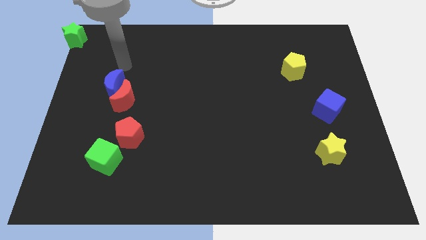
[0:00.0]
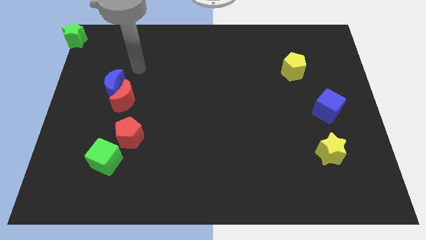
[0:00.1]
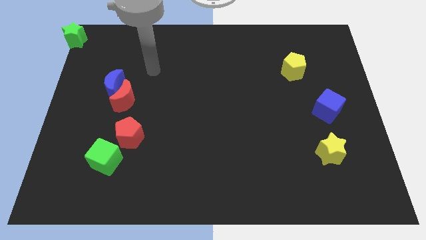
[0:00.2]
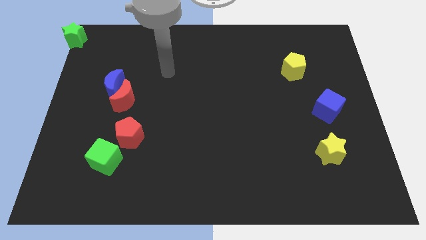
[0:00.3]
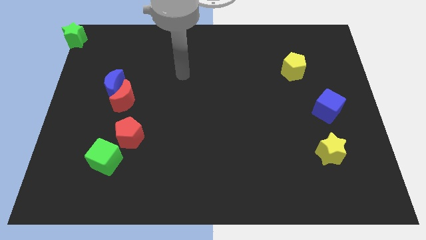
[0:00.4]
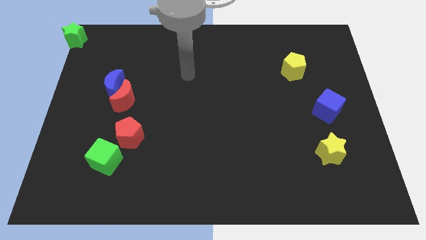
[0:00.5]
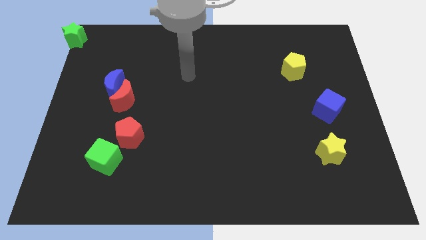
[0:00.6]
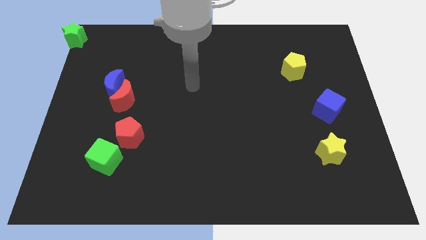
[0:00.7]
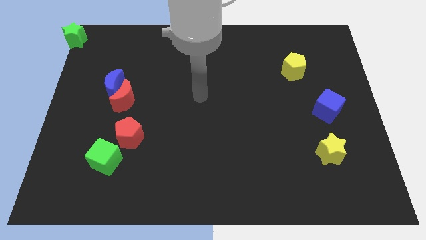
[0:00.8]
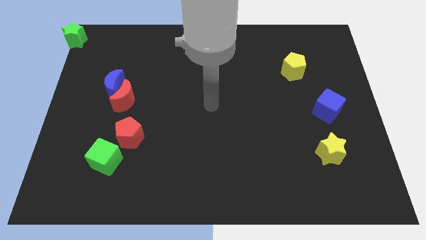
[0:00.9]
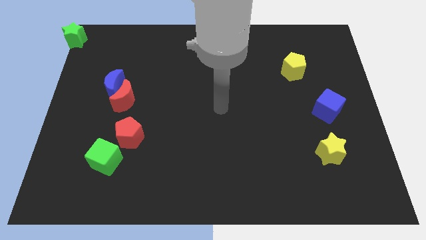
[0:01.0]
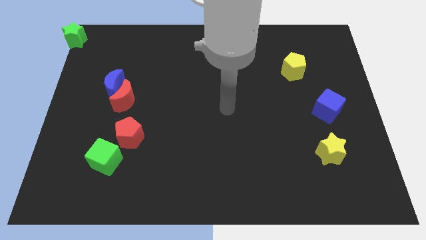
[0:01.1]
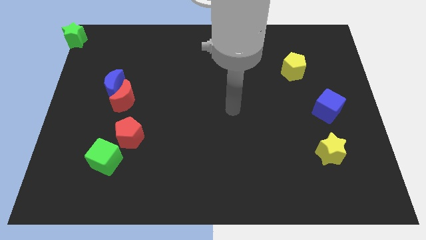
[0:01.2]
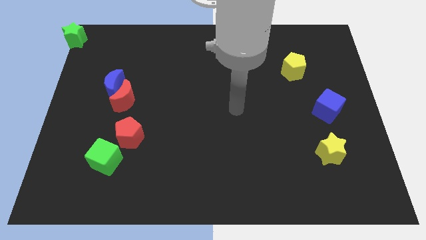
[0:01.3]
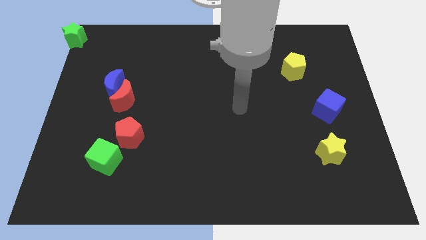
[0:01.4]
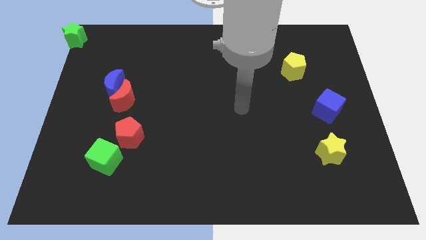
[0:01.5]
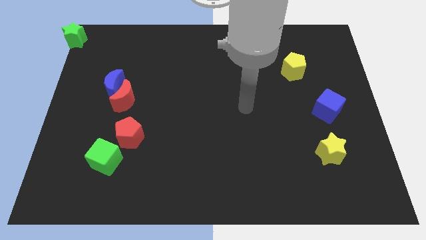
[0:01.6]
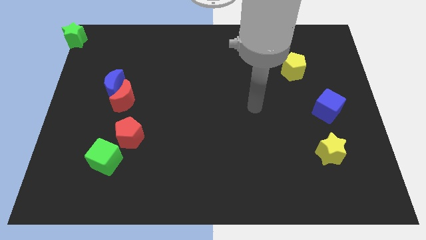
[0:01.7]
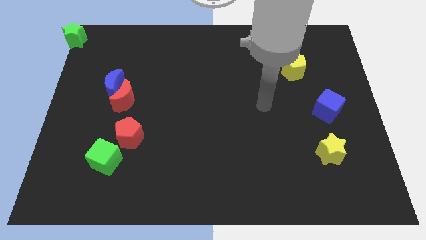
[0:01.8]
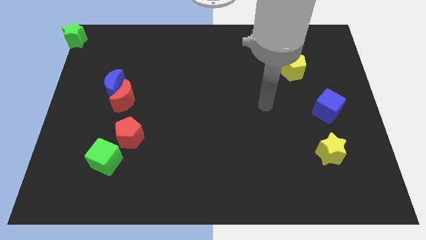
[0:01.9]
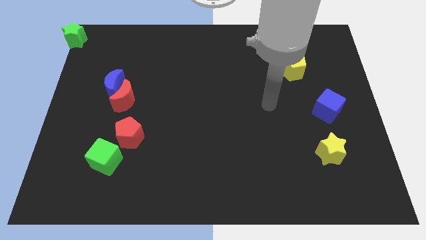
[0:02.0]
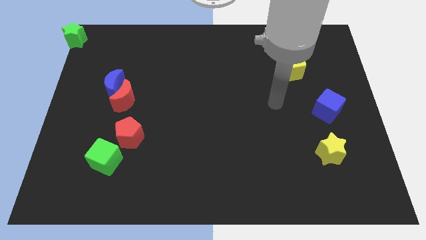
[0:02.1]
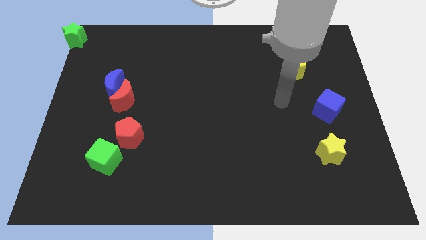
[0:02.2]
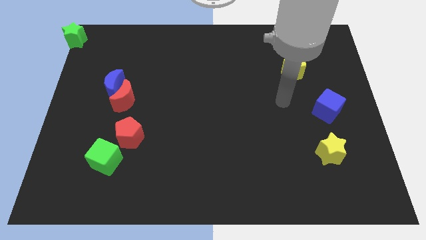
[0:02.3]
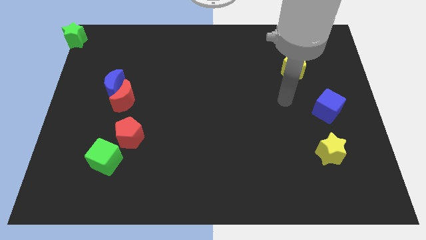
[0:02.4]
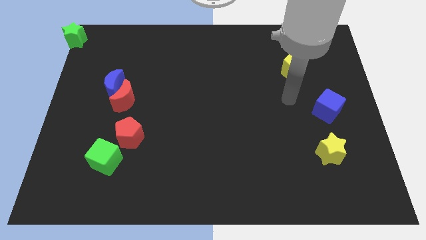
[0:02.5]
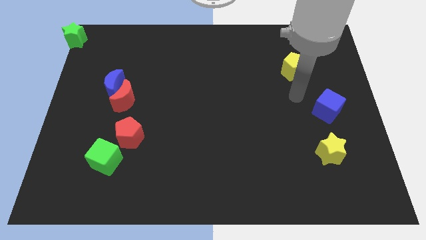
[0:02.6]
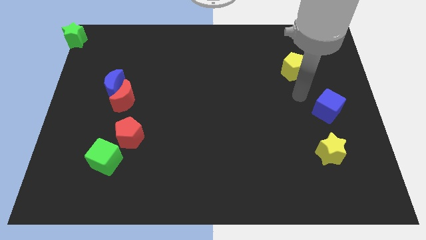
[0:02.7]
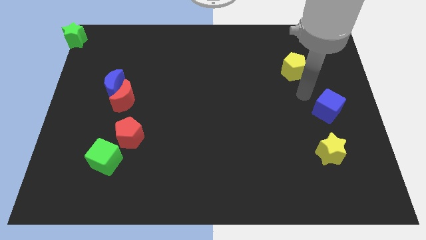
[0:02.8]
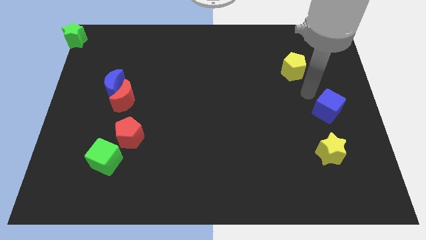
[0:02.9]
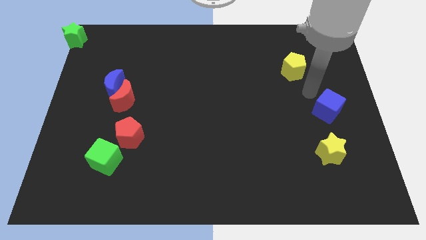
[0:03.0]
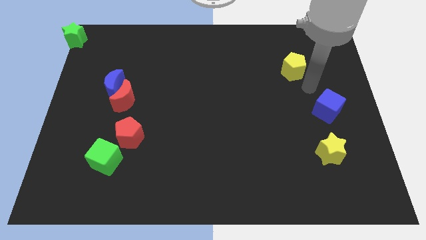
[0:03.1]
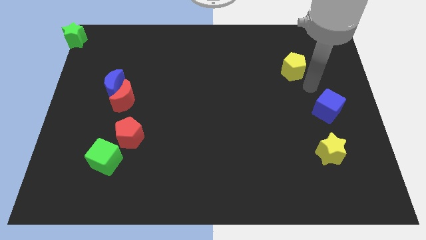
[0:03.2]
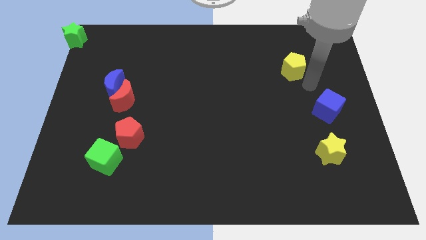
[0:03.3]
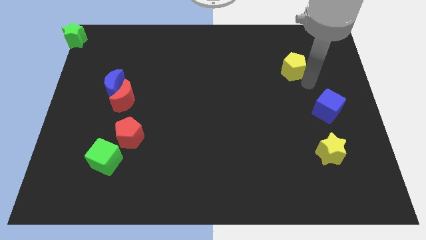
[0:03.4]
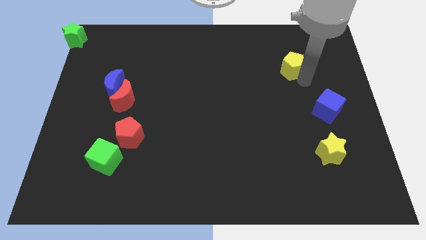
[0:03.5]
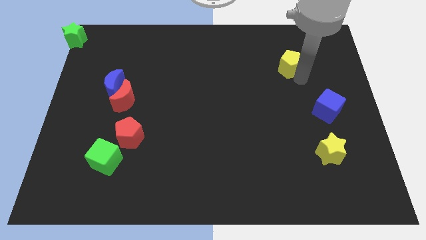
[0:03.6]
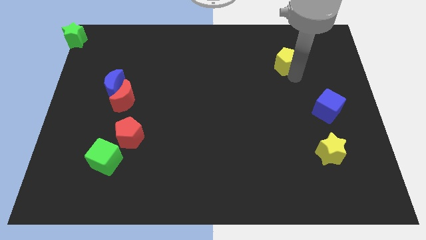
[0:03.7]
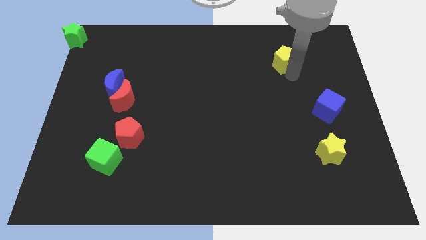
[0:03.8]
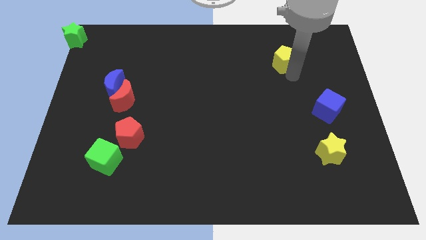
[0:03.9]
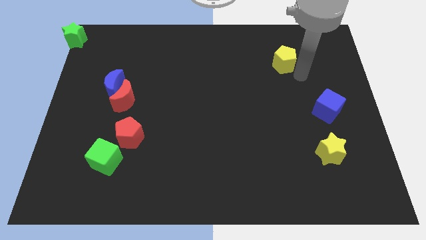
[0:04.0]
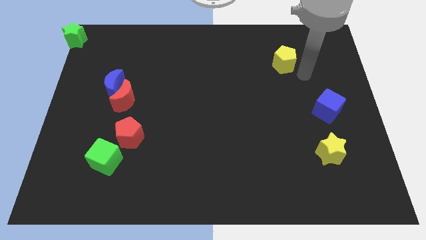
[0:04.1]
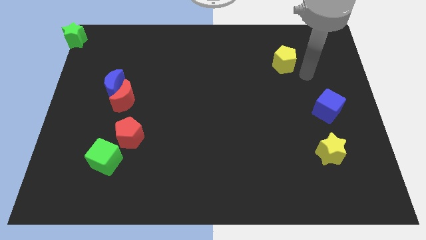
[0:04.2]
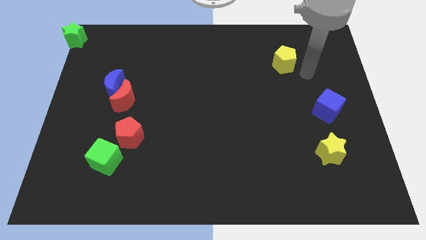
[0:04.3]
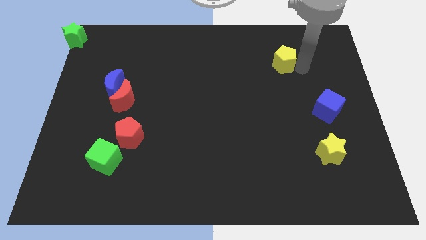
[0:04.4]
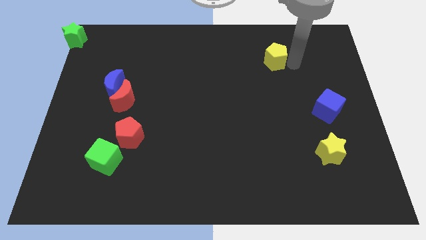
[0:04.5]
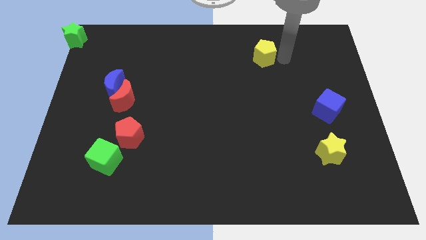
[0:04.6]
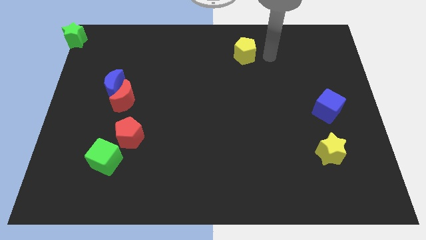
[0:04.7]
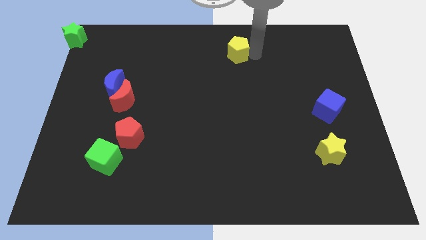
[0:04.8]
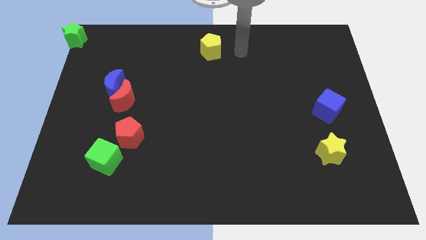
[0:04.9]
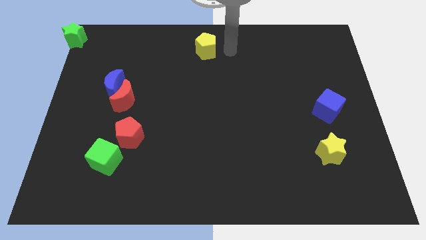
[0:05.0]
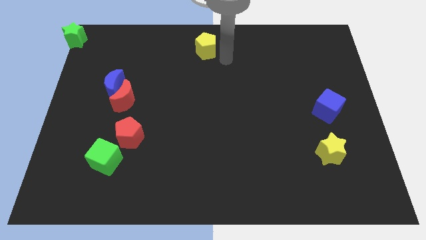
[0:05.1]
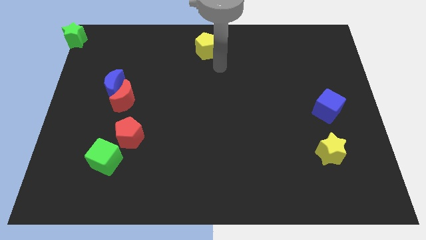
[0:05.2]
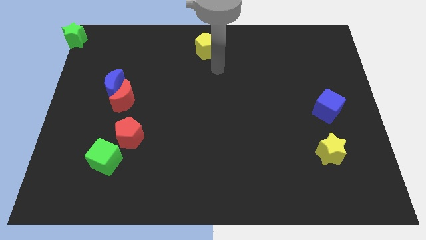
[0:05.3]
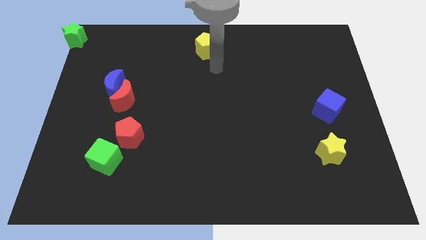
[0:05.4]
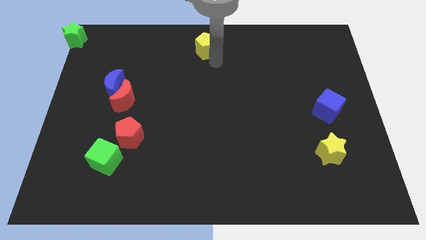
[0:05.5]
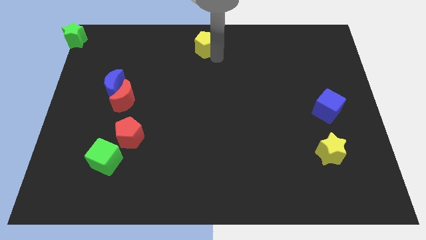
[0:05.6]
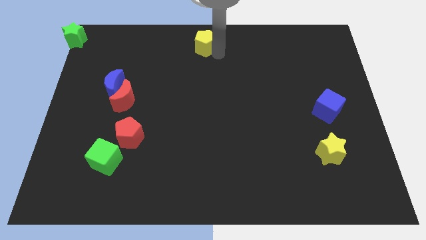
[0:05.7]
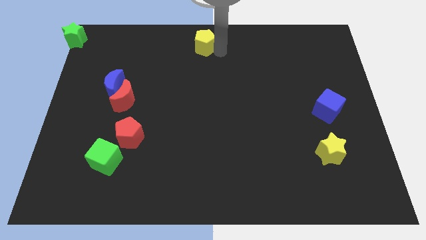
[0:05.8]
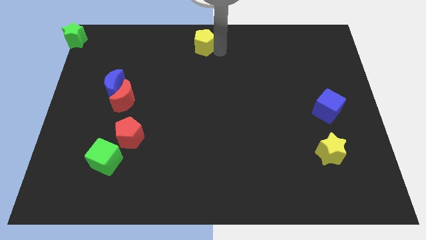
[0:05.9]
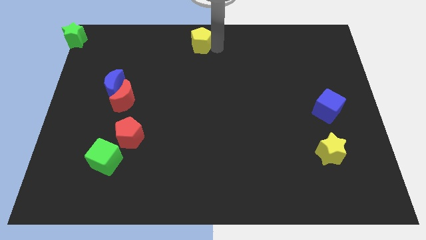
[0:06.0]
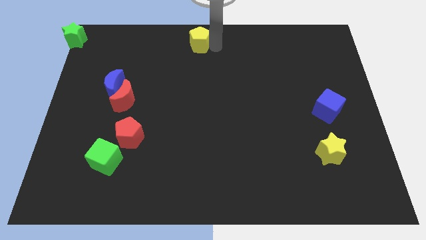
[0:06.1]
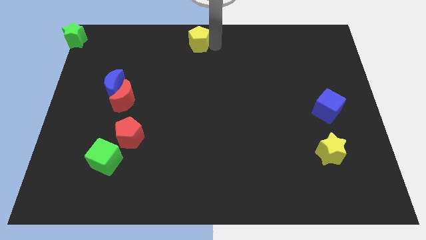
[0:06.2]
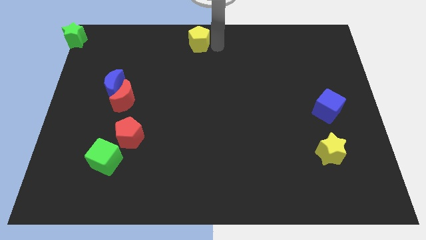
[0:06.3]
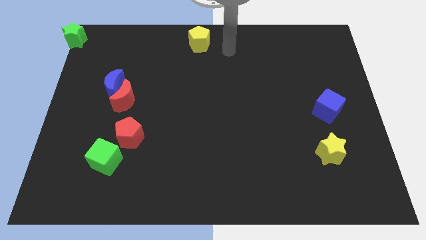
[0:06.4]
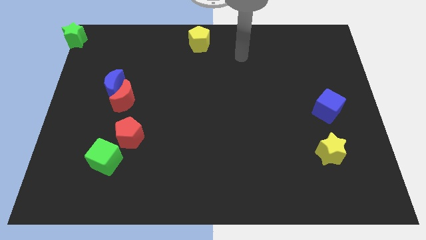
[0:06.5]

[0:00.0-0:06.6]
push the yellow pentagon to the top center of the board

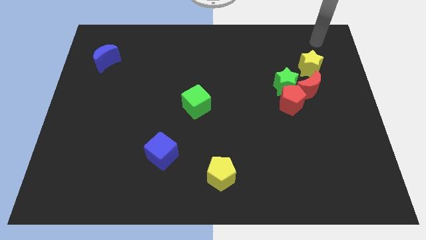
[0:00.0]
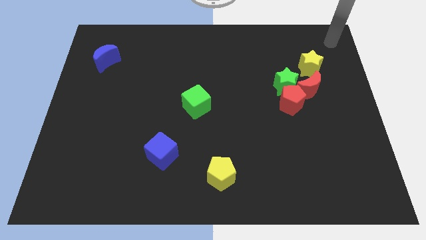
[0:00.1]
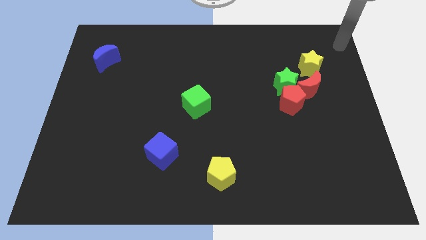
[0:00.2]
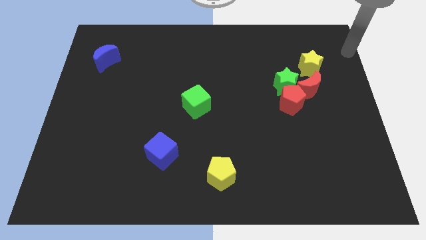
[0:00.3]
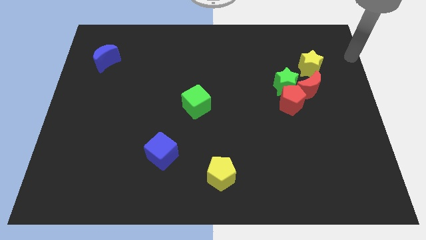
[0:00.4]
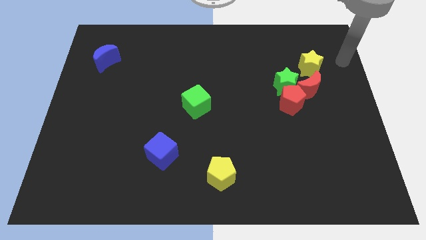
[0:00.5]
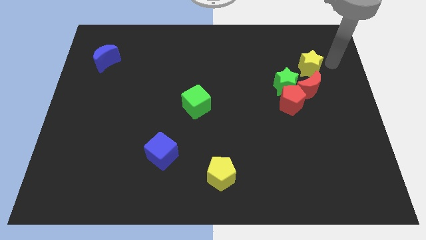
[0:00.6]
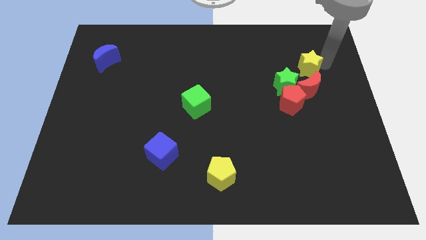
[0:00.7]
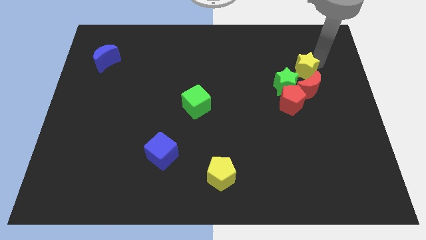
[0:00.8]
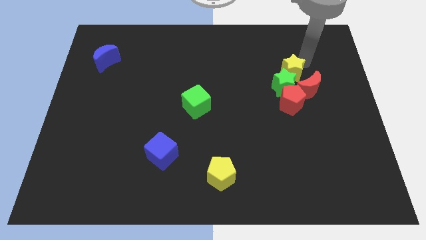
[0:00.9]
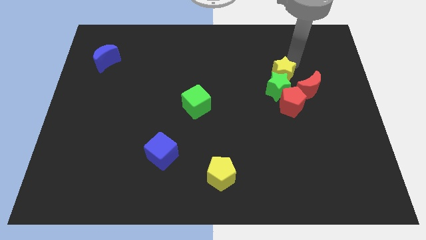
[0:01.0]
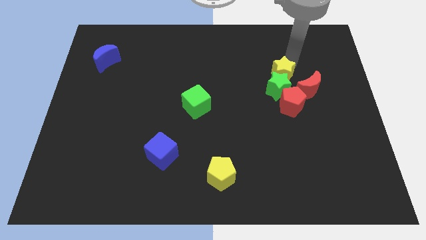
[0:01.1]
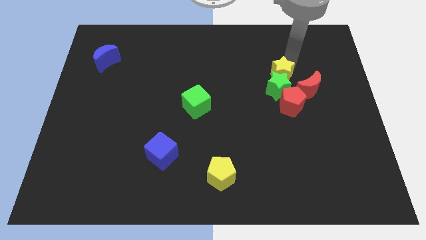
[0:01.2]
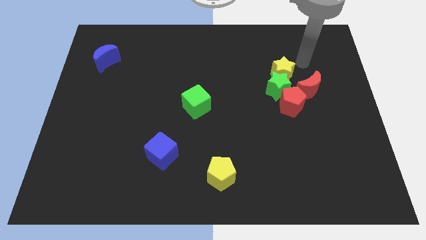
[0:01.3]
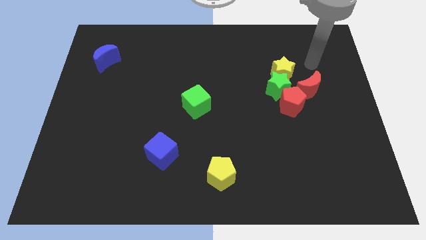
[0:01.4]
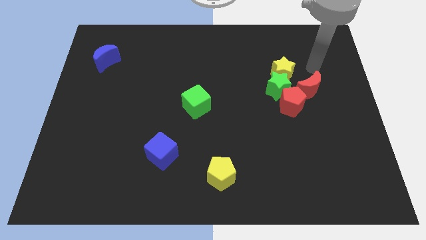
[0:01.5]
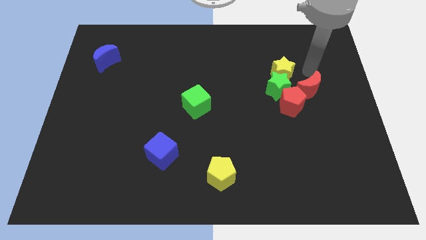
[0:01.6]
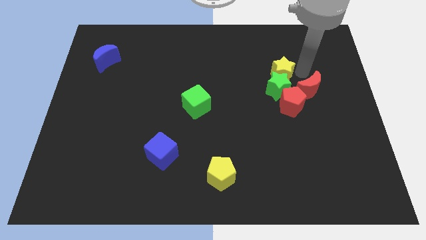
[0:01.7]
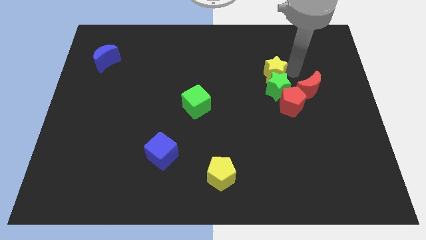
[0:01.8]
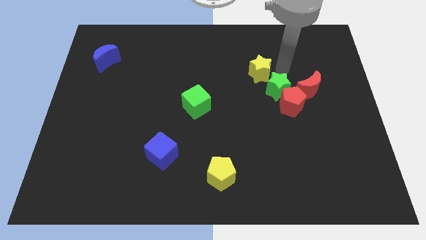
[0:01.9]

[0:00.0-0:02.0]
place the yellow star above the green star

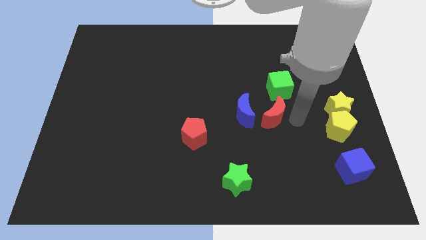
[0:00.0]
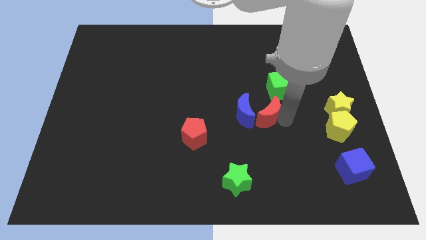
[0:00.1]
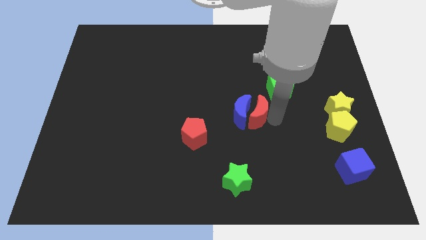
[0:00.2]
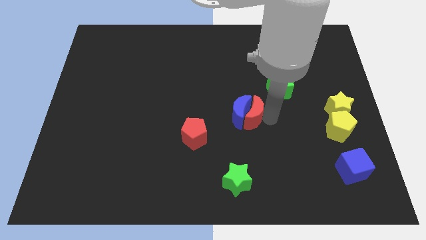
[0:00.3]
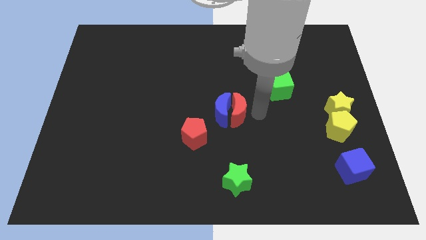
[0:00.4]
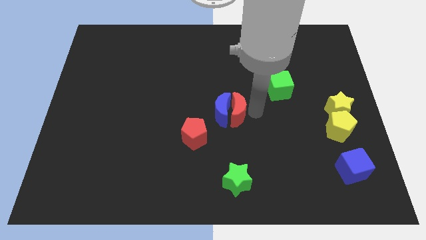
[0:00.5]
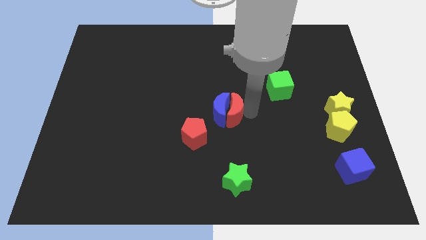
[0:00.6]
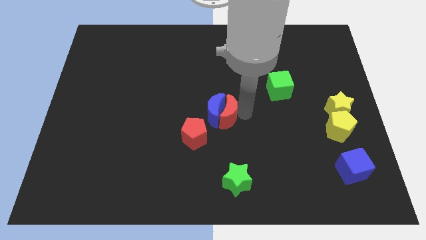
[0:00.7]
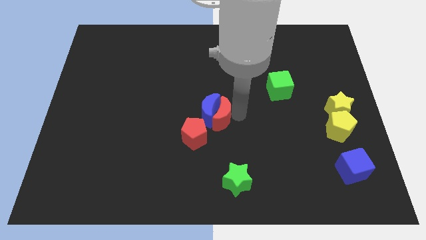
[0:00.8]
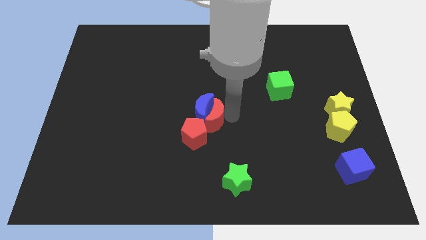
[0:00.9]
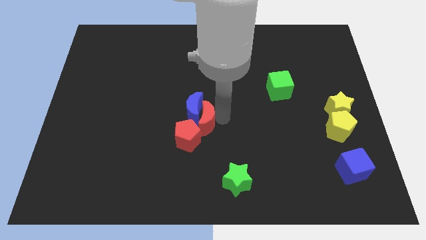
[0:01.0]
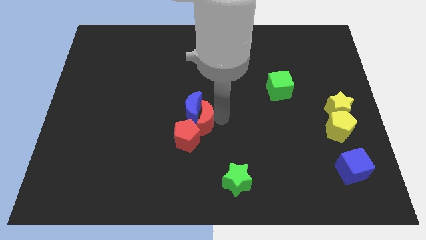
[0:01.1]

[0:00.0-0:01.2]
push the red crescent into the blue crescent
